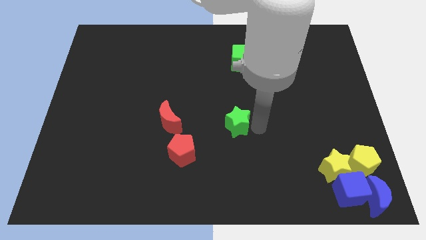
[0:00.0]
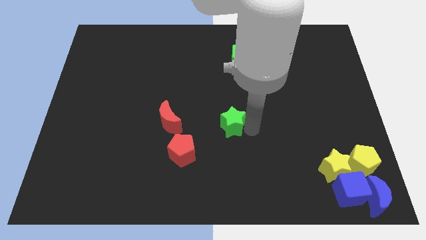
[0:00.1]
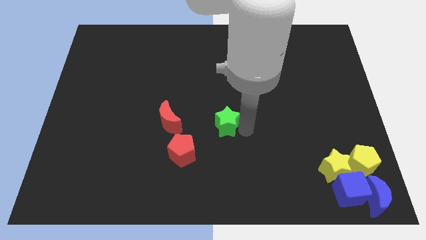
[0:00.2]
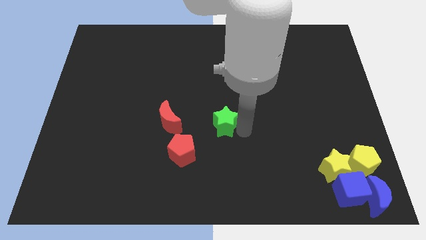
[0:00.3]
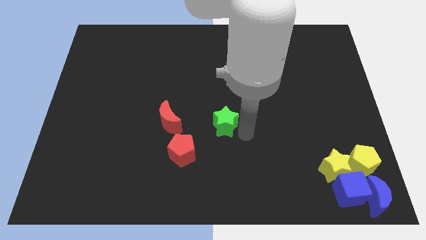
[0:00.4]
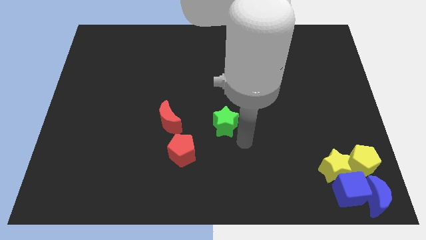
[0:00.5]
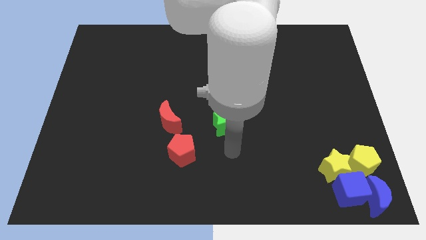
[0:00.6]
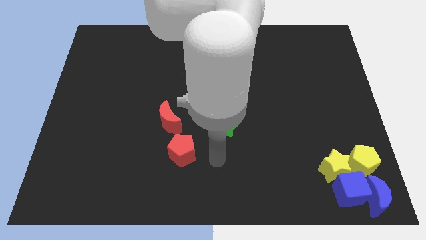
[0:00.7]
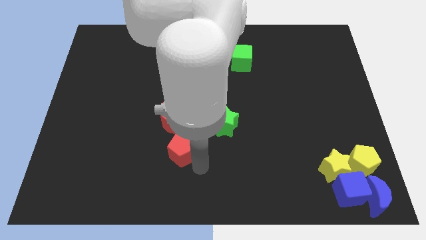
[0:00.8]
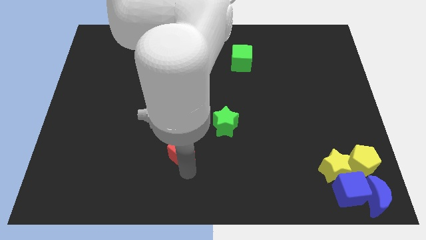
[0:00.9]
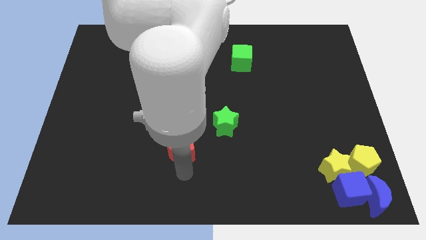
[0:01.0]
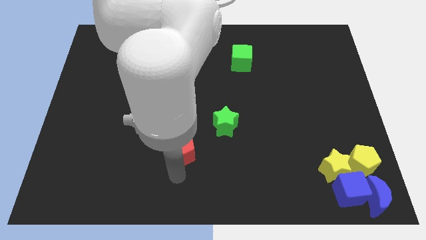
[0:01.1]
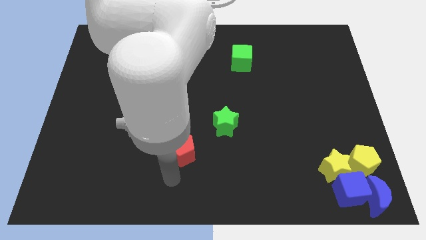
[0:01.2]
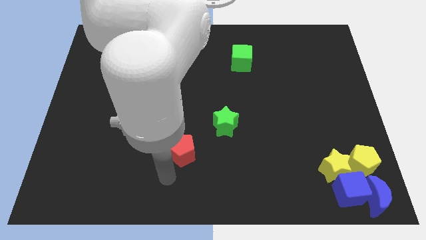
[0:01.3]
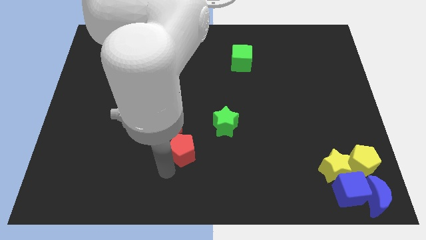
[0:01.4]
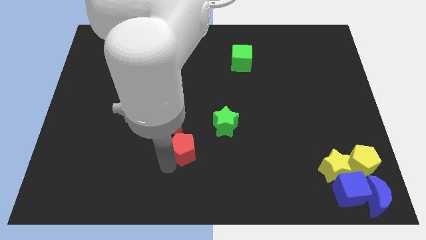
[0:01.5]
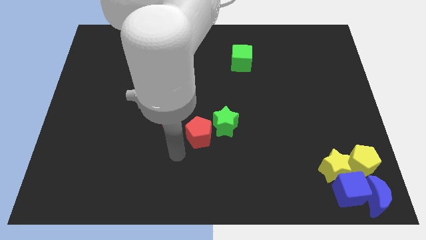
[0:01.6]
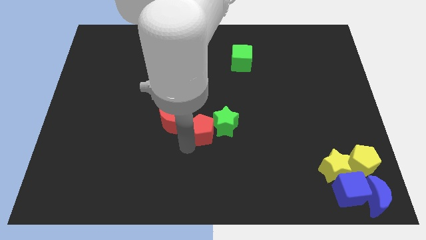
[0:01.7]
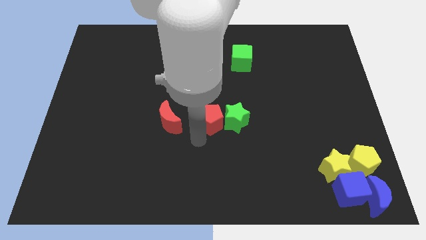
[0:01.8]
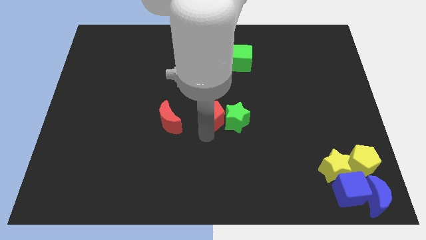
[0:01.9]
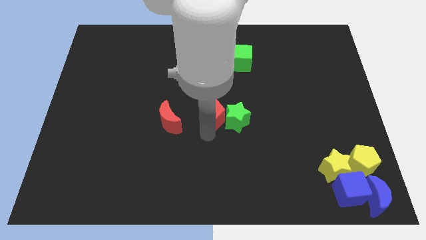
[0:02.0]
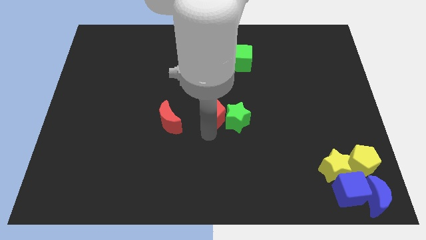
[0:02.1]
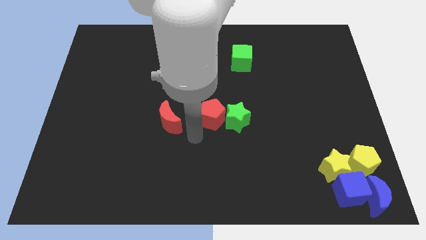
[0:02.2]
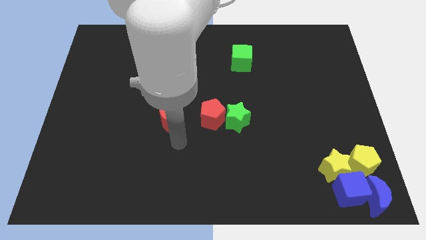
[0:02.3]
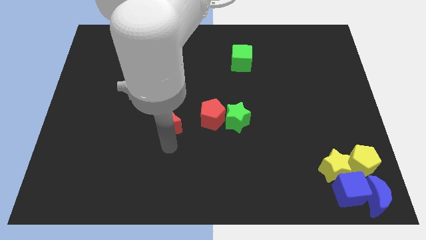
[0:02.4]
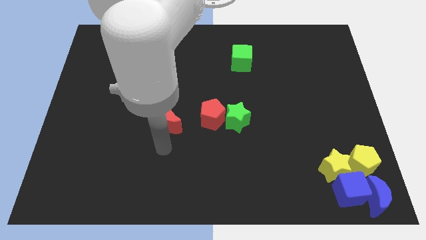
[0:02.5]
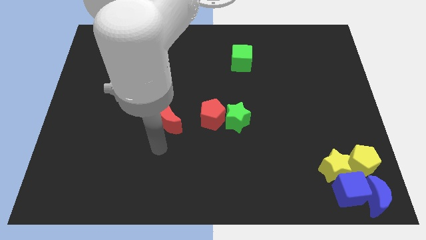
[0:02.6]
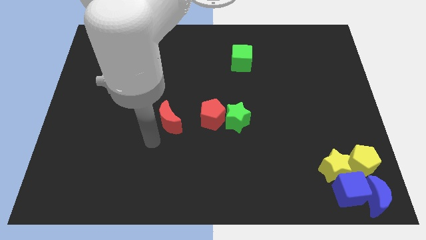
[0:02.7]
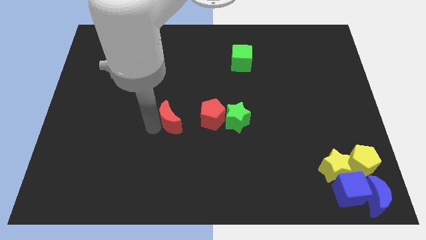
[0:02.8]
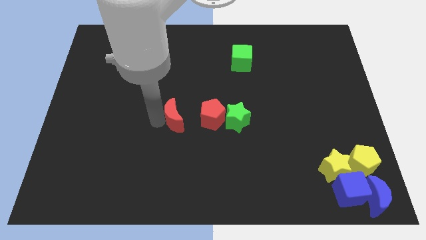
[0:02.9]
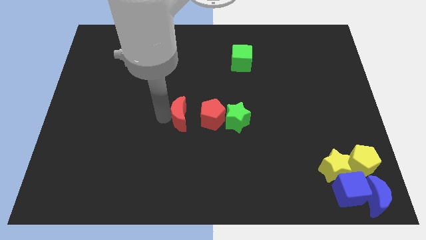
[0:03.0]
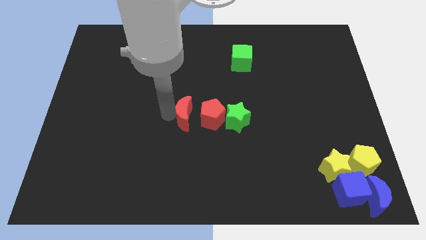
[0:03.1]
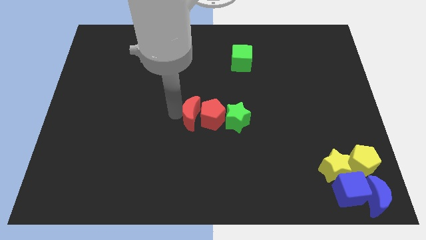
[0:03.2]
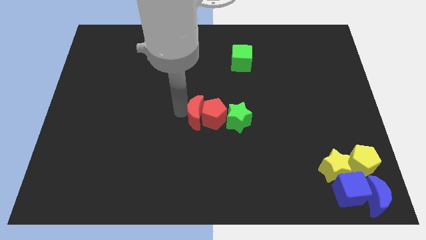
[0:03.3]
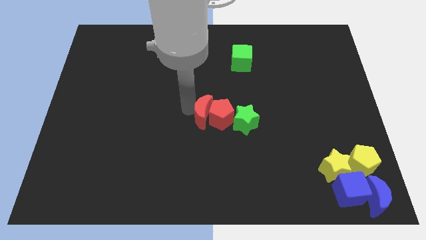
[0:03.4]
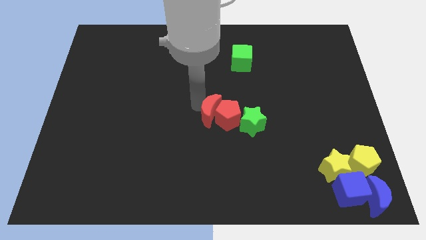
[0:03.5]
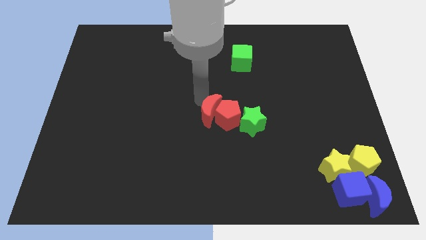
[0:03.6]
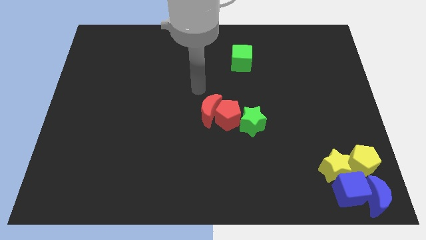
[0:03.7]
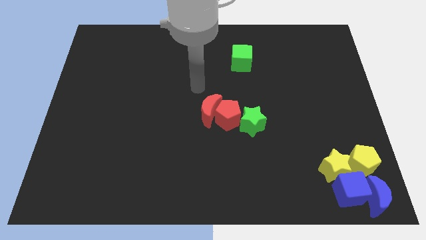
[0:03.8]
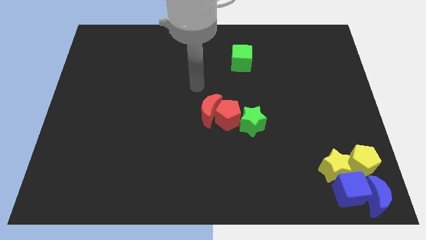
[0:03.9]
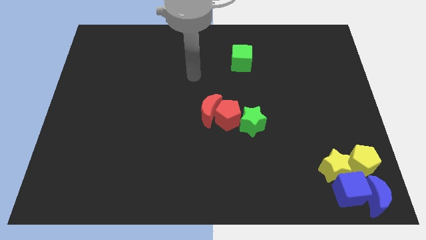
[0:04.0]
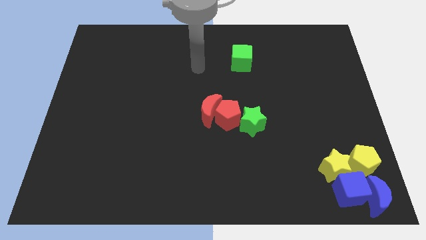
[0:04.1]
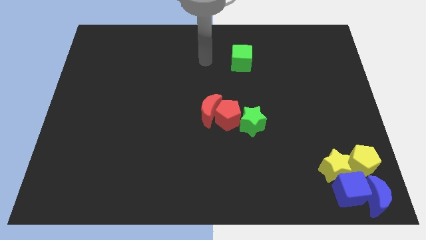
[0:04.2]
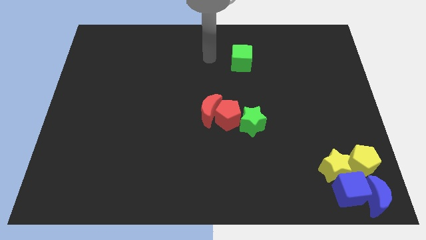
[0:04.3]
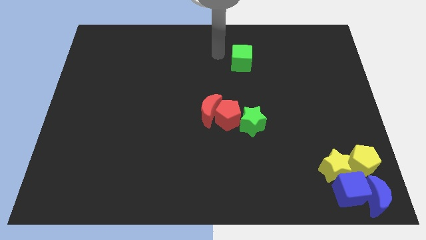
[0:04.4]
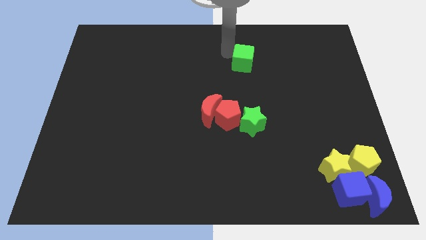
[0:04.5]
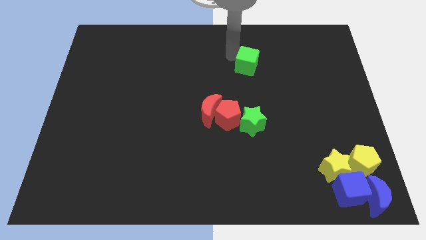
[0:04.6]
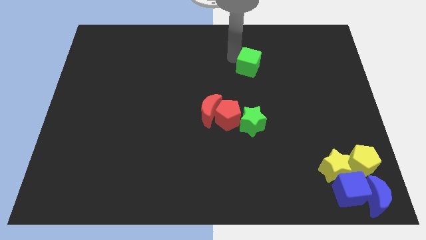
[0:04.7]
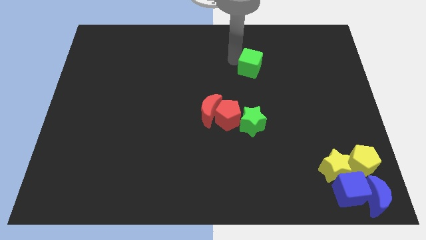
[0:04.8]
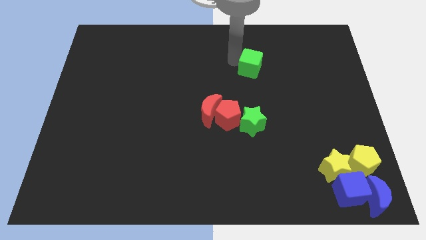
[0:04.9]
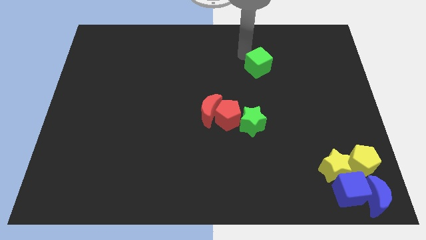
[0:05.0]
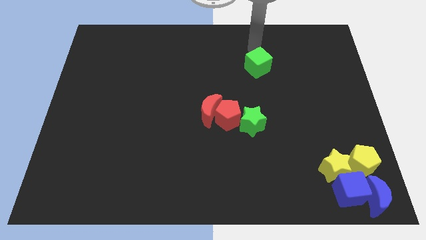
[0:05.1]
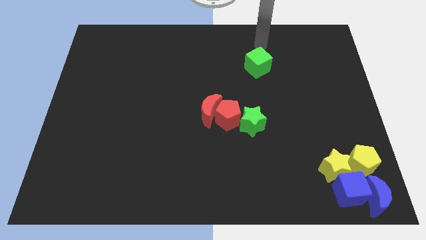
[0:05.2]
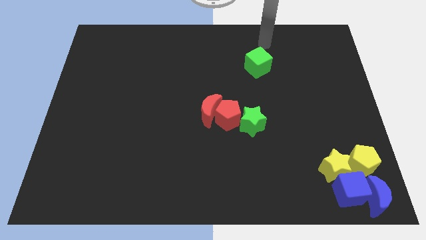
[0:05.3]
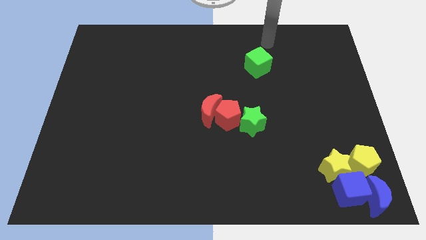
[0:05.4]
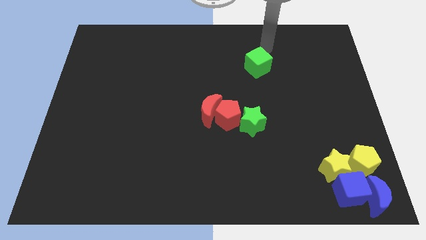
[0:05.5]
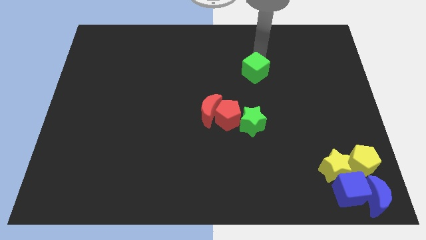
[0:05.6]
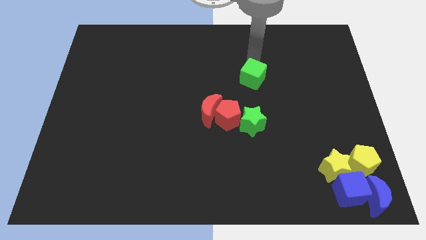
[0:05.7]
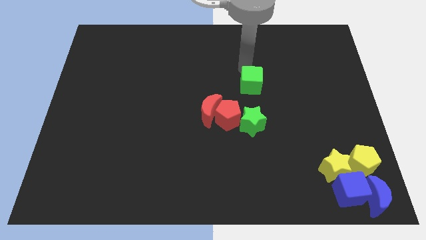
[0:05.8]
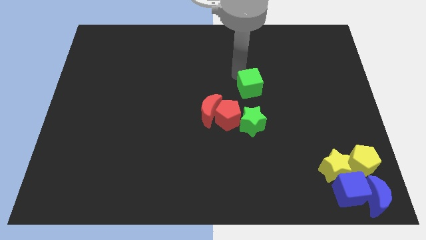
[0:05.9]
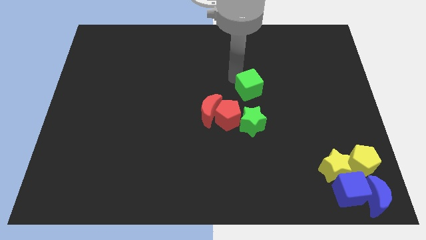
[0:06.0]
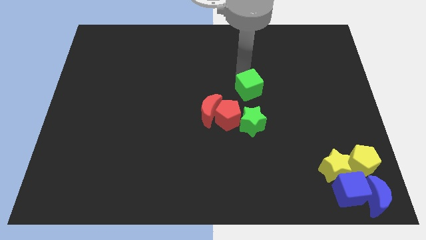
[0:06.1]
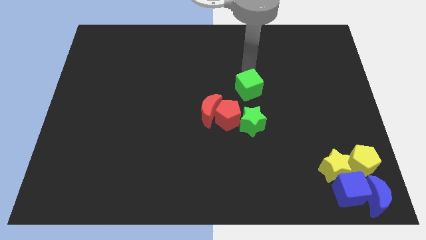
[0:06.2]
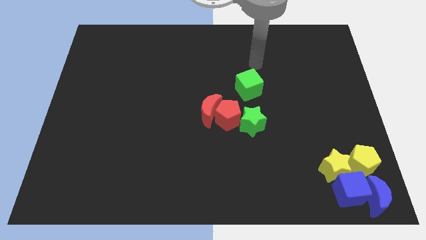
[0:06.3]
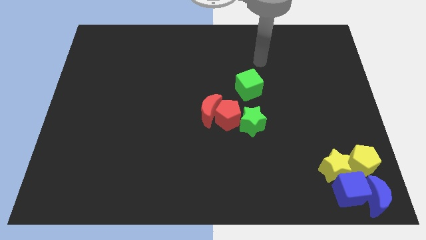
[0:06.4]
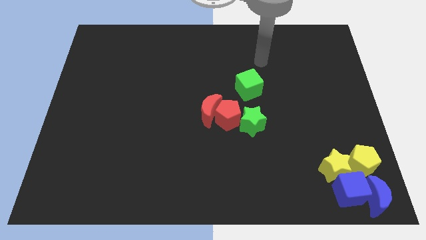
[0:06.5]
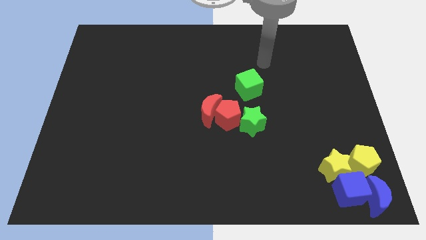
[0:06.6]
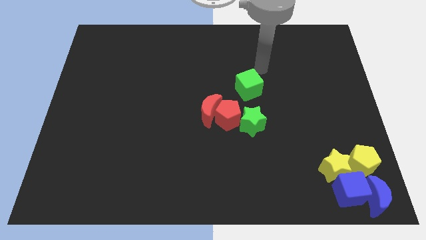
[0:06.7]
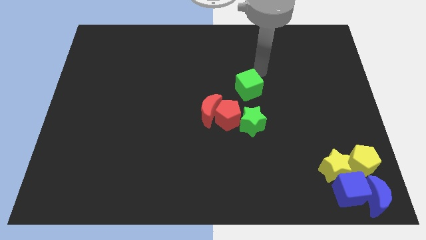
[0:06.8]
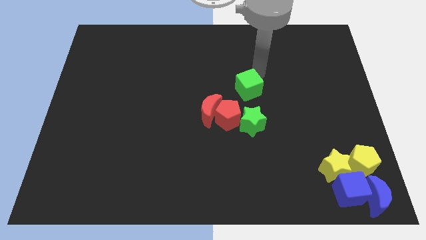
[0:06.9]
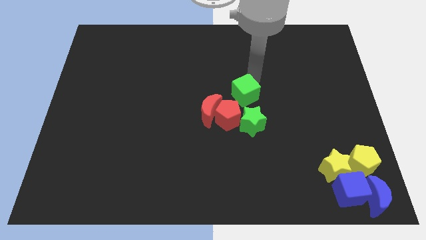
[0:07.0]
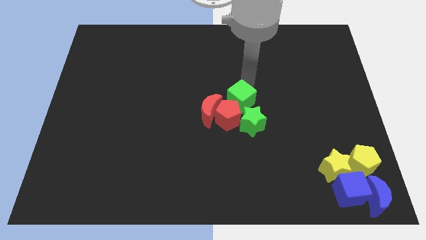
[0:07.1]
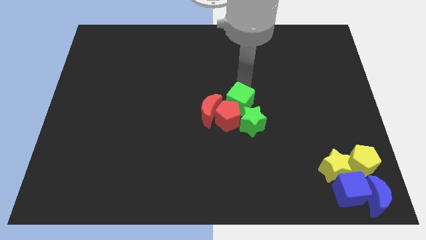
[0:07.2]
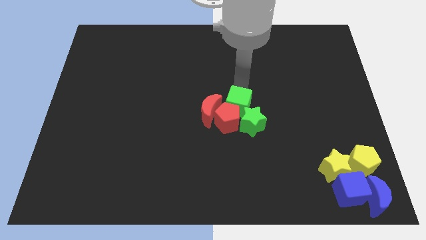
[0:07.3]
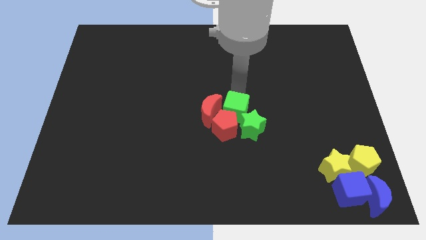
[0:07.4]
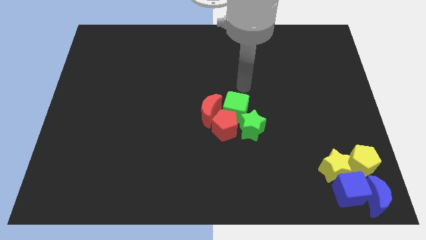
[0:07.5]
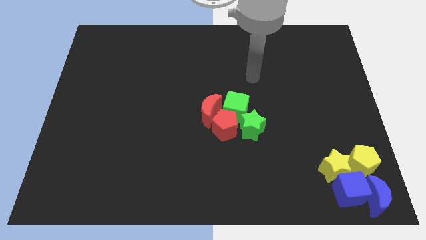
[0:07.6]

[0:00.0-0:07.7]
put the green and red blocks together

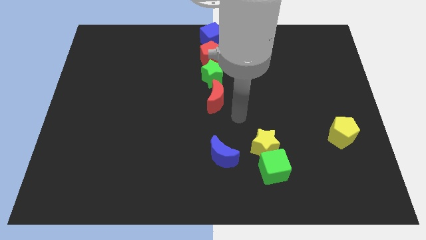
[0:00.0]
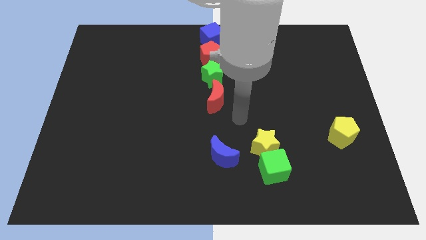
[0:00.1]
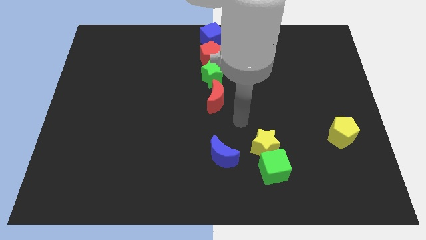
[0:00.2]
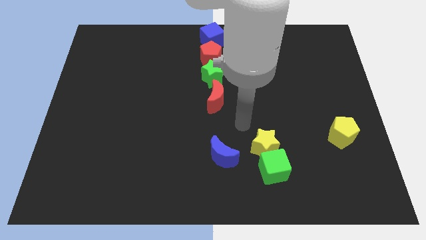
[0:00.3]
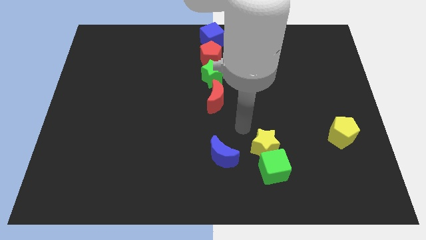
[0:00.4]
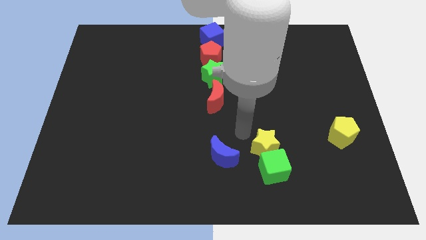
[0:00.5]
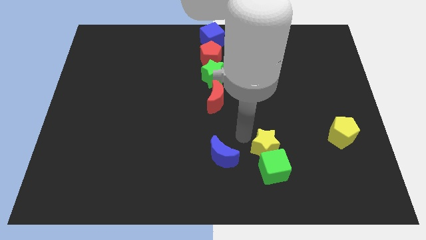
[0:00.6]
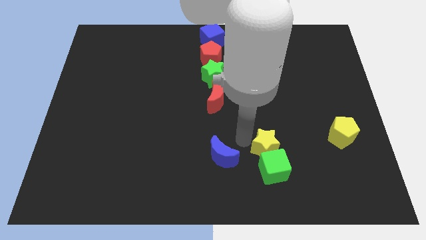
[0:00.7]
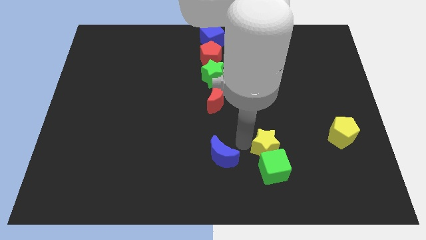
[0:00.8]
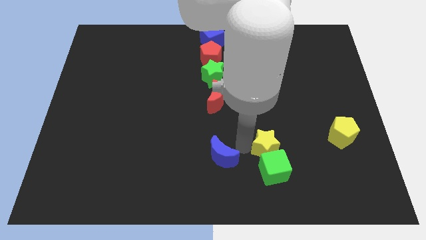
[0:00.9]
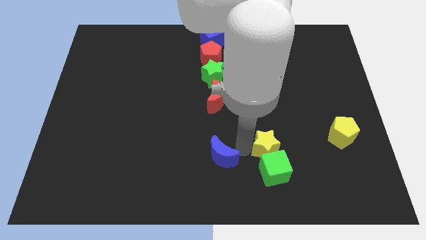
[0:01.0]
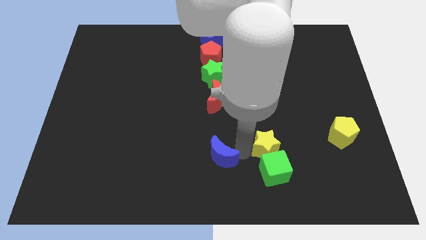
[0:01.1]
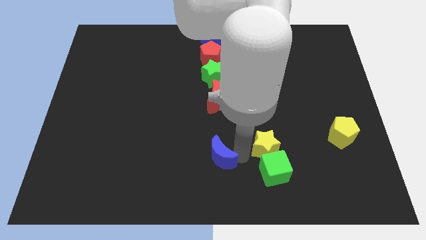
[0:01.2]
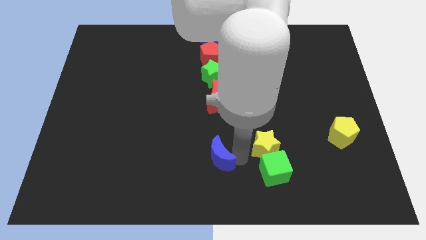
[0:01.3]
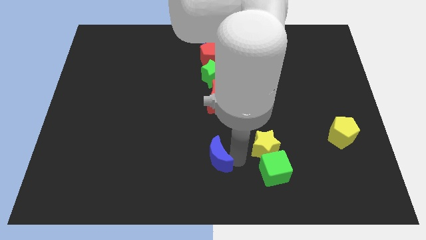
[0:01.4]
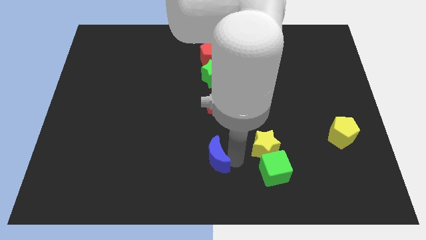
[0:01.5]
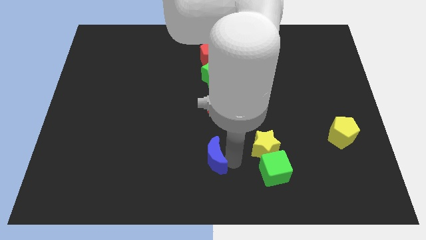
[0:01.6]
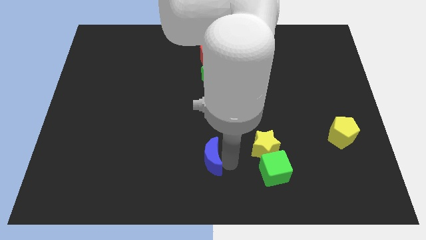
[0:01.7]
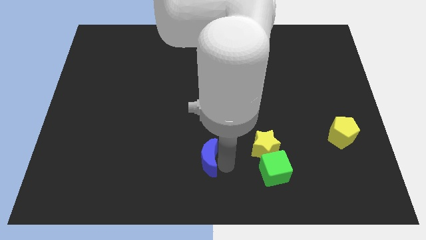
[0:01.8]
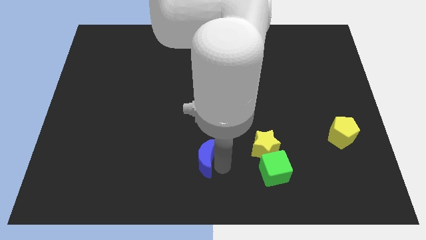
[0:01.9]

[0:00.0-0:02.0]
move blue moon slightly left
